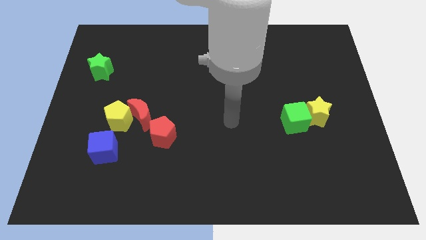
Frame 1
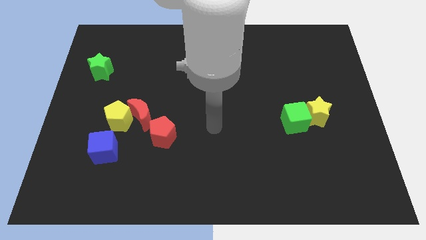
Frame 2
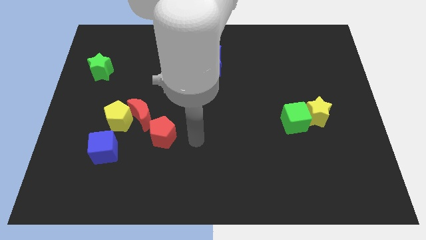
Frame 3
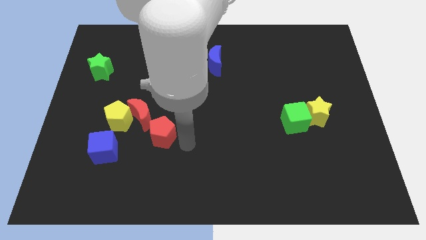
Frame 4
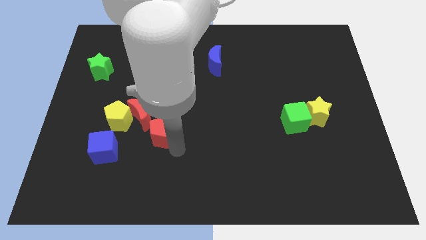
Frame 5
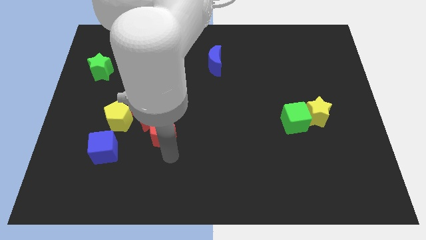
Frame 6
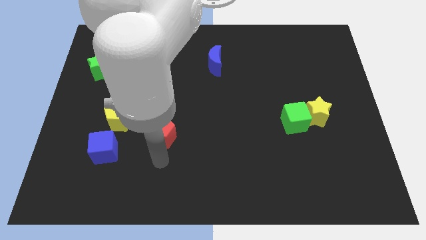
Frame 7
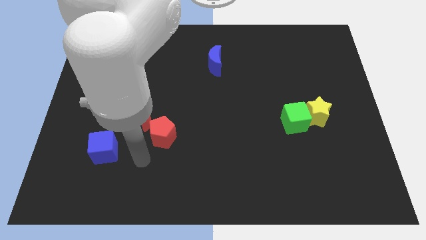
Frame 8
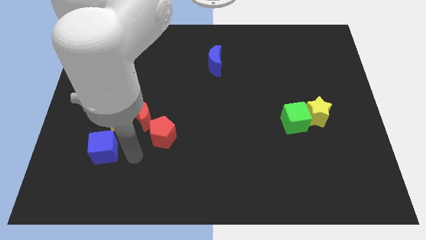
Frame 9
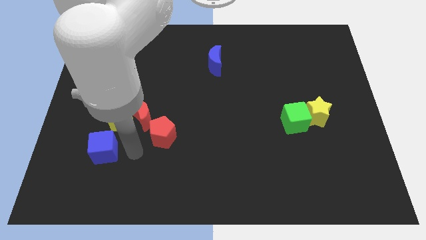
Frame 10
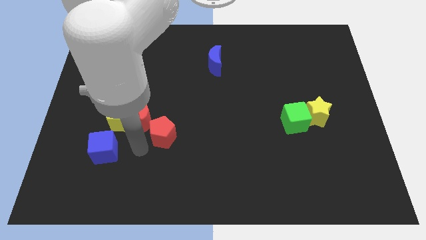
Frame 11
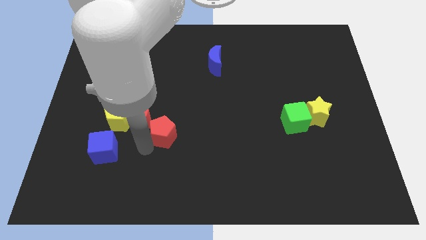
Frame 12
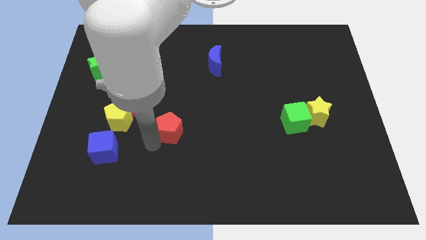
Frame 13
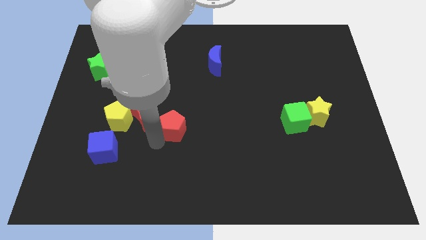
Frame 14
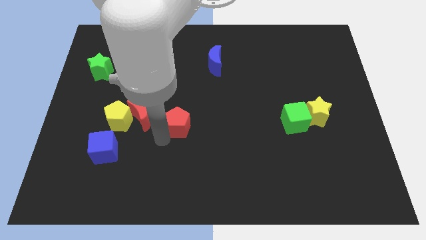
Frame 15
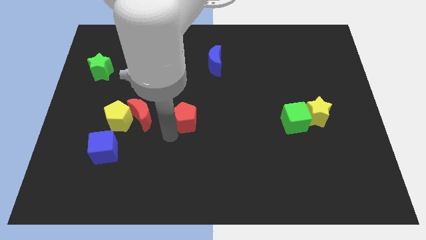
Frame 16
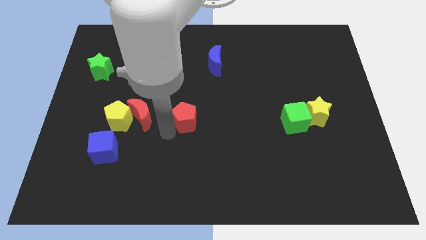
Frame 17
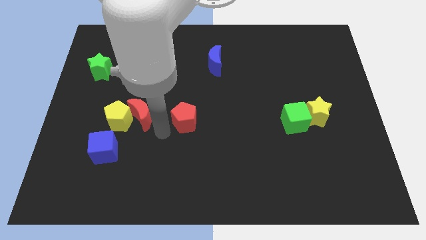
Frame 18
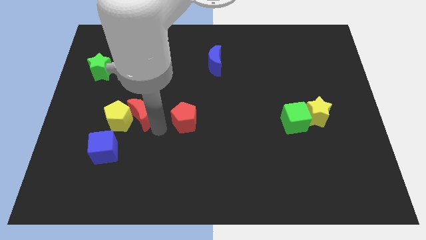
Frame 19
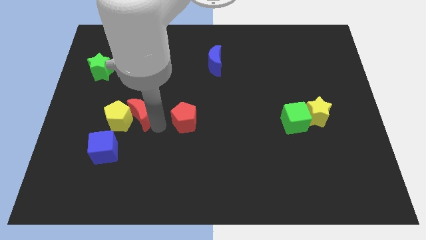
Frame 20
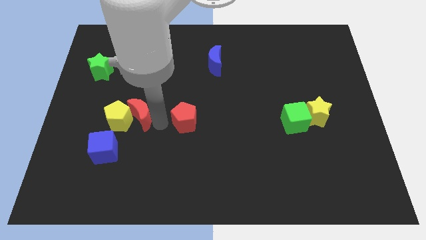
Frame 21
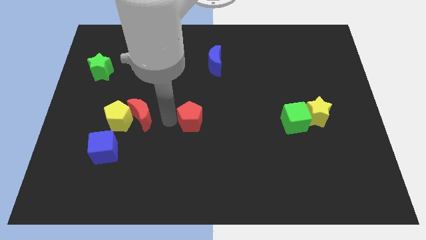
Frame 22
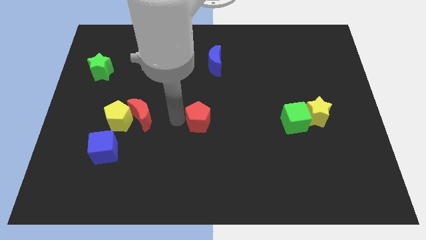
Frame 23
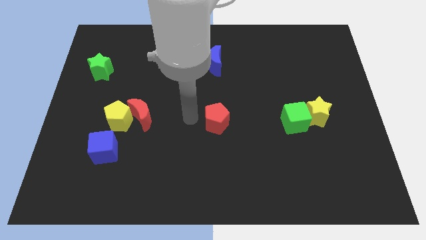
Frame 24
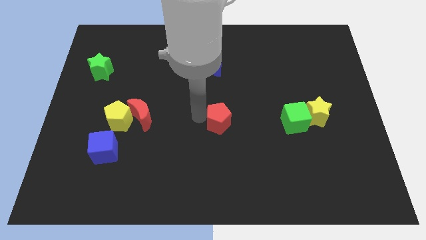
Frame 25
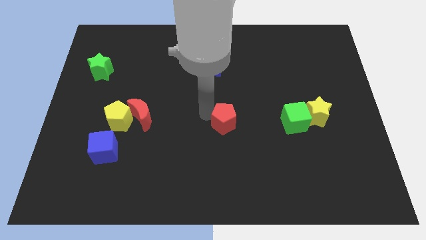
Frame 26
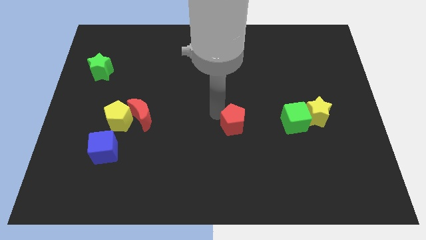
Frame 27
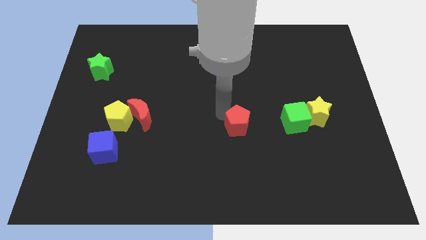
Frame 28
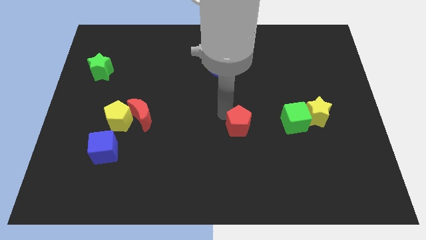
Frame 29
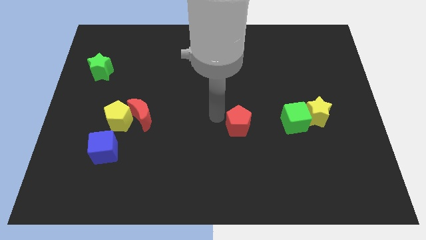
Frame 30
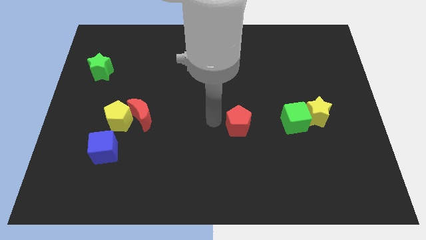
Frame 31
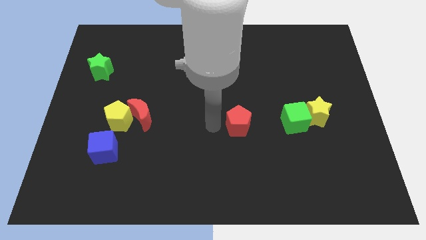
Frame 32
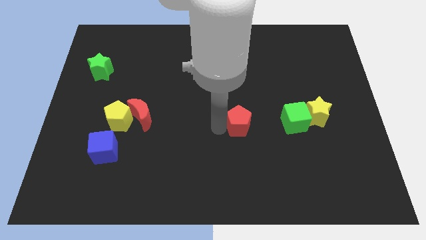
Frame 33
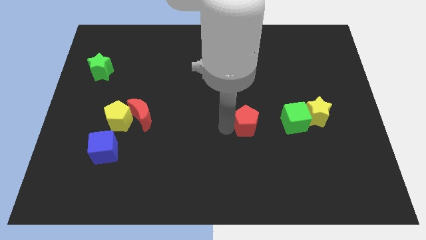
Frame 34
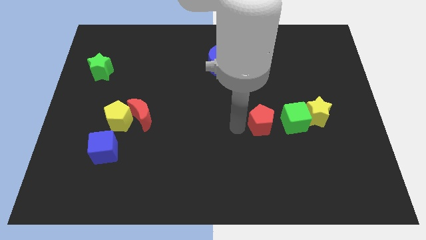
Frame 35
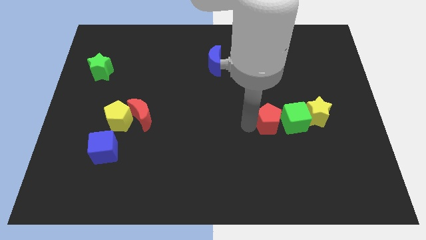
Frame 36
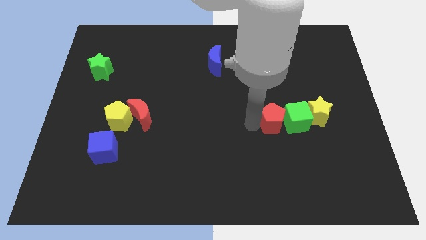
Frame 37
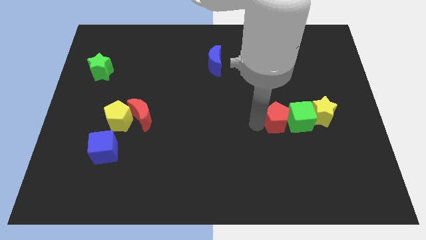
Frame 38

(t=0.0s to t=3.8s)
slide the red pentagon close to the green cube

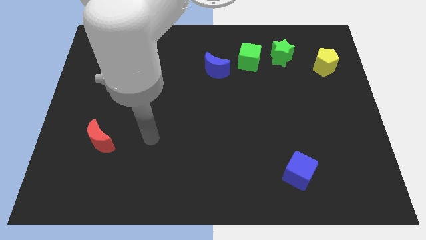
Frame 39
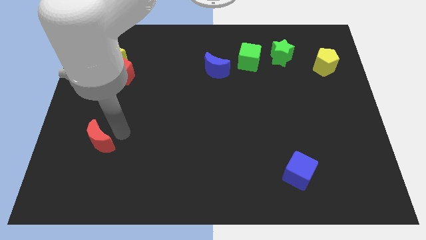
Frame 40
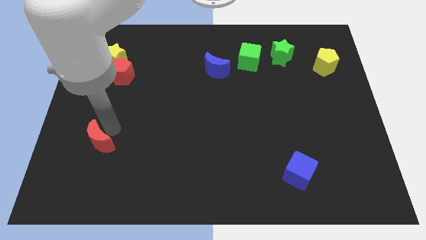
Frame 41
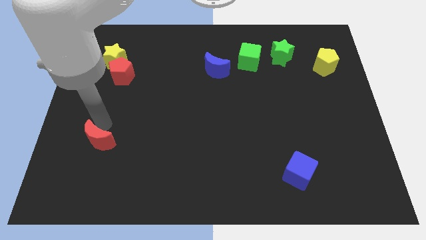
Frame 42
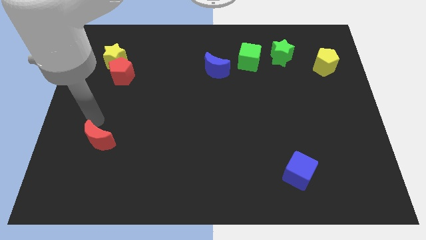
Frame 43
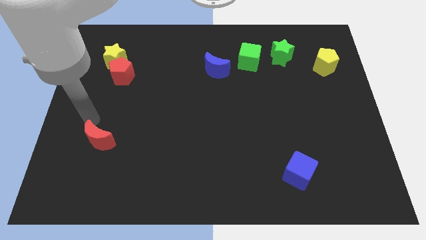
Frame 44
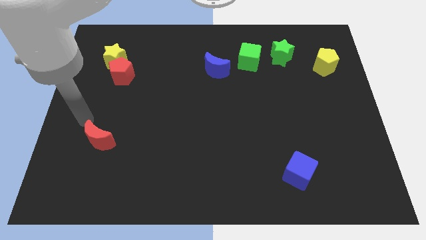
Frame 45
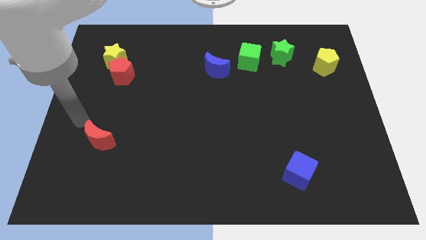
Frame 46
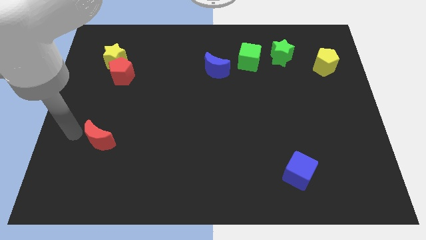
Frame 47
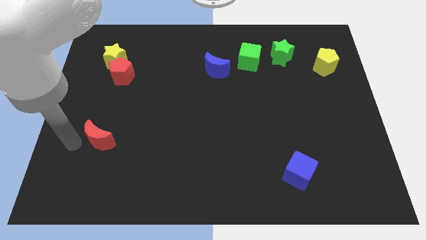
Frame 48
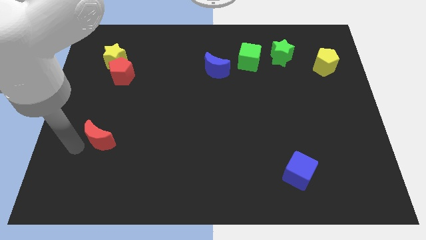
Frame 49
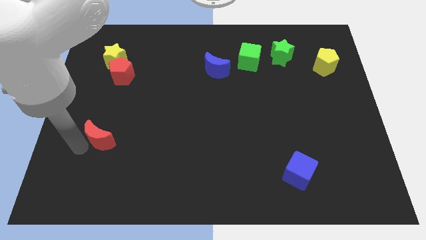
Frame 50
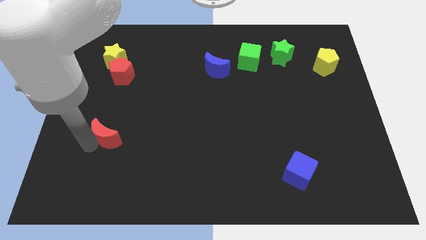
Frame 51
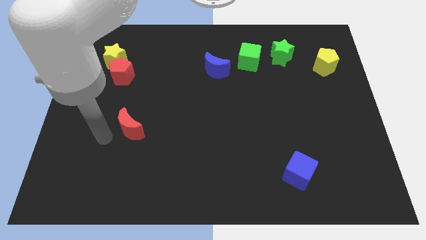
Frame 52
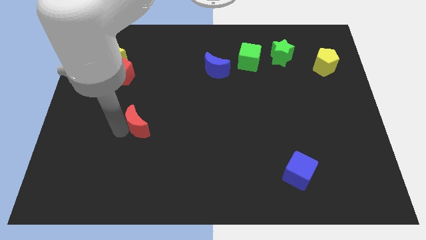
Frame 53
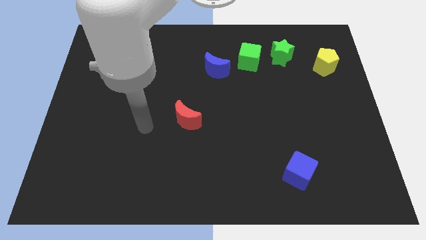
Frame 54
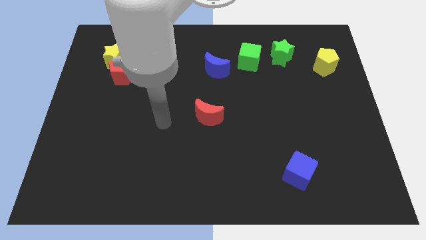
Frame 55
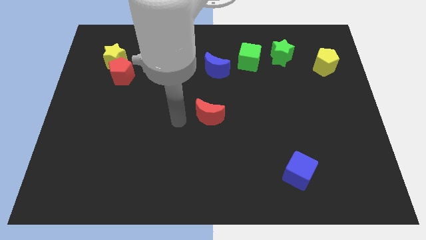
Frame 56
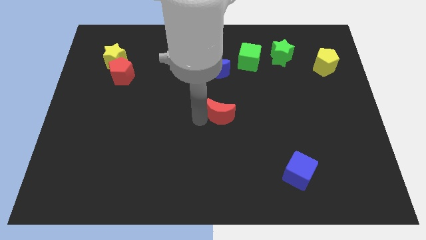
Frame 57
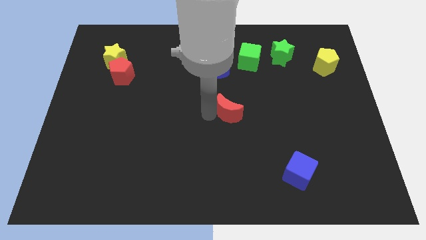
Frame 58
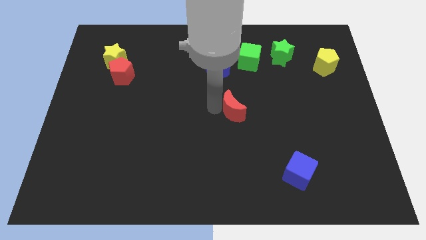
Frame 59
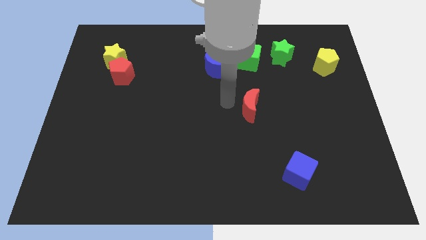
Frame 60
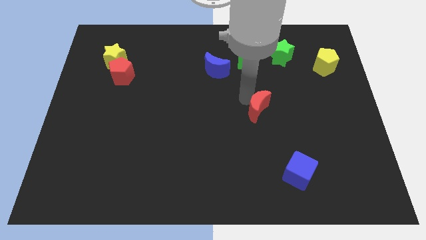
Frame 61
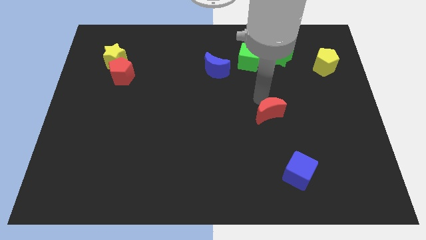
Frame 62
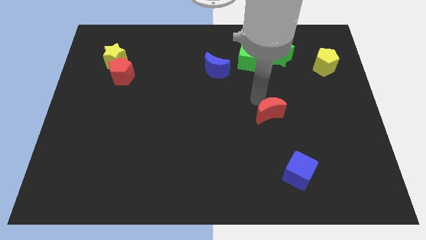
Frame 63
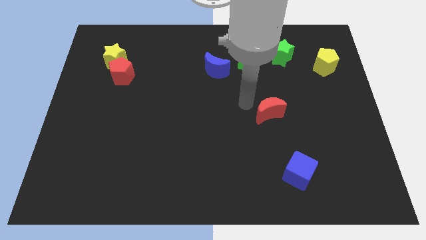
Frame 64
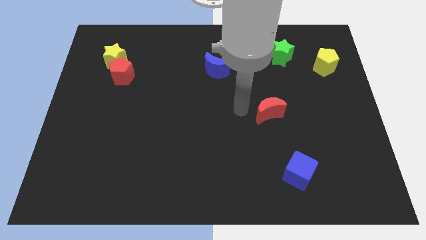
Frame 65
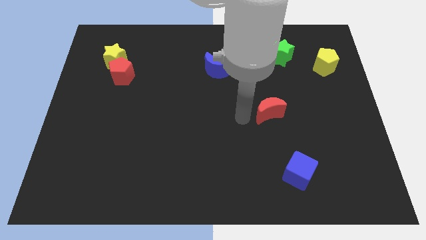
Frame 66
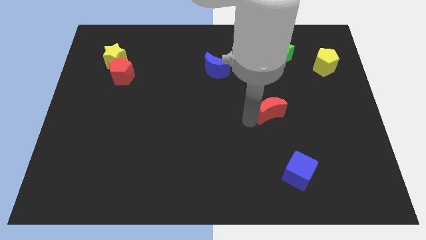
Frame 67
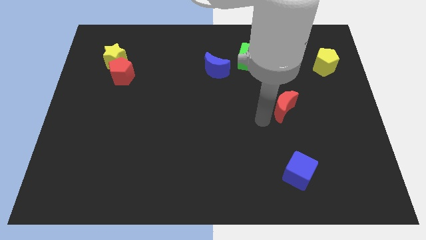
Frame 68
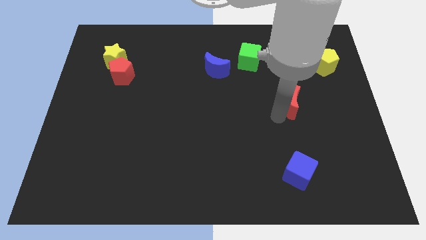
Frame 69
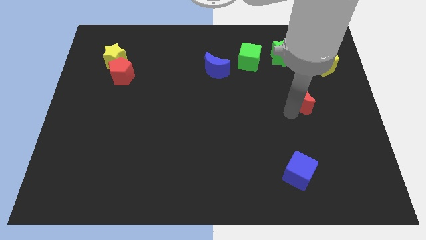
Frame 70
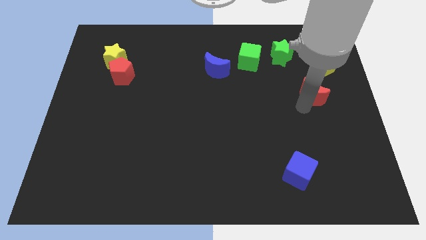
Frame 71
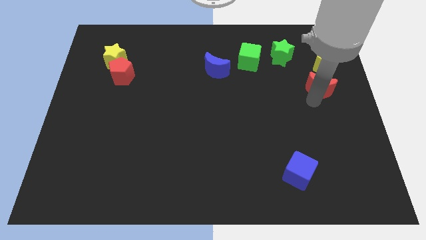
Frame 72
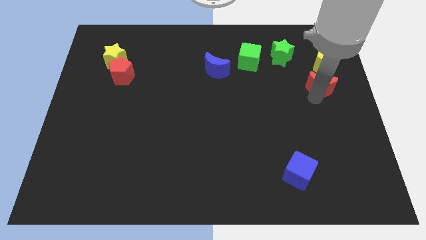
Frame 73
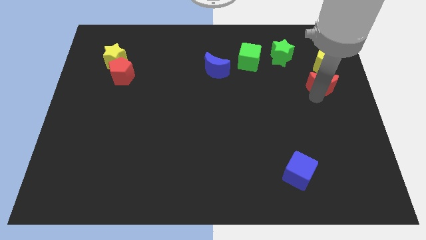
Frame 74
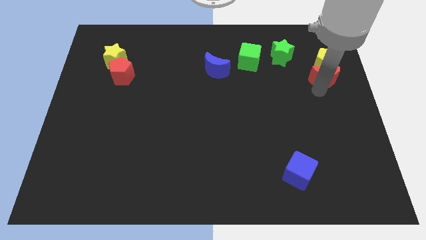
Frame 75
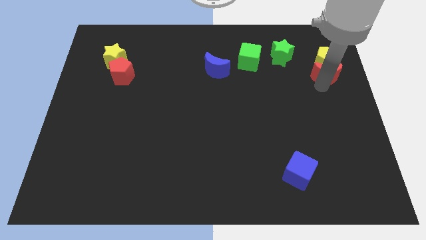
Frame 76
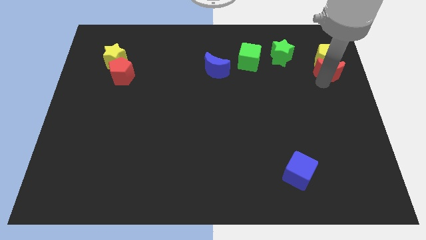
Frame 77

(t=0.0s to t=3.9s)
put the red moon to the yellow pentagon
